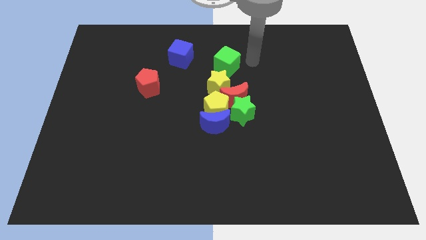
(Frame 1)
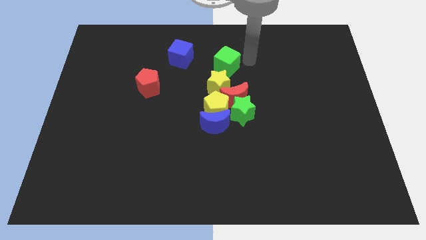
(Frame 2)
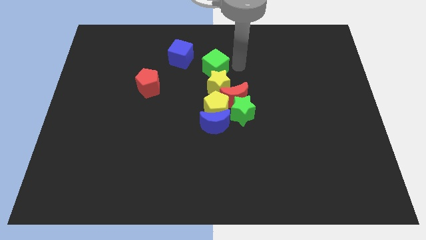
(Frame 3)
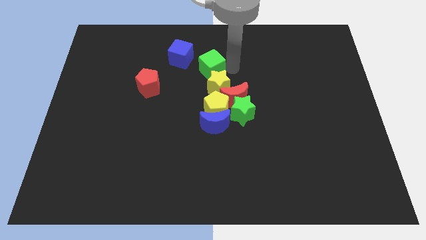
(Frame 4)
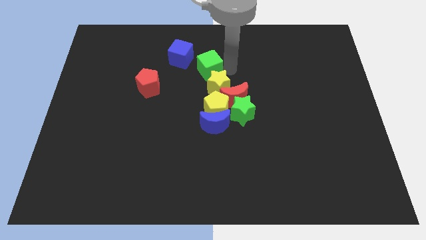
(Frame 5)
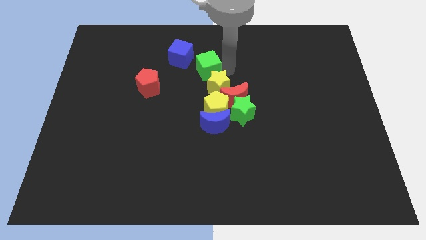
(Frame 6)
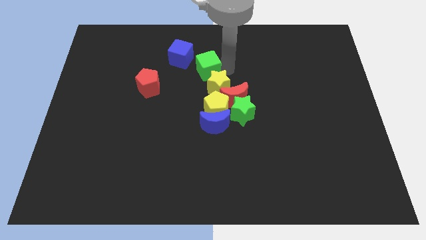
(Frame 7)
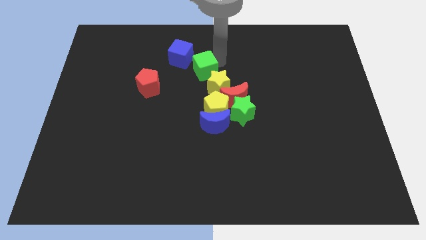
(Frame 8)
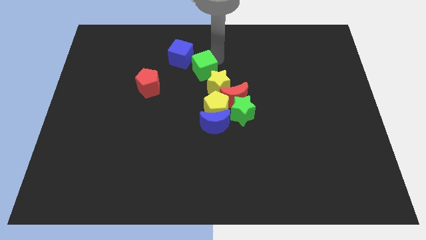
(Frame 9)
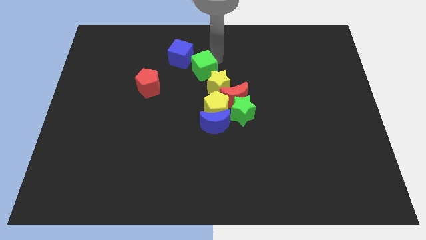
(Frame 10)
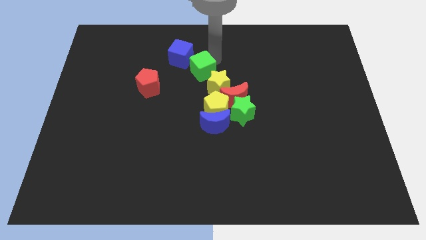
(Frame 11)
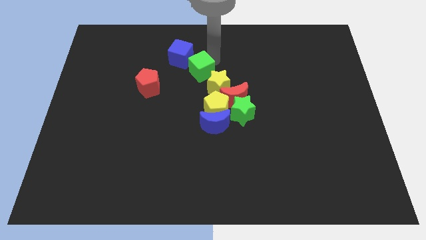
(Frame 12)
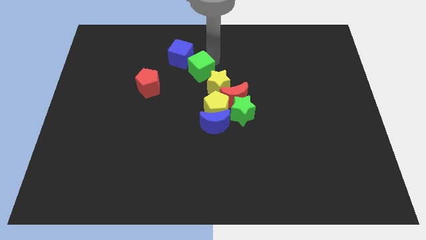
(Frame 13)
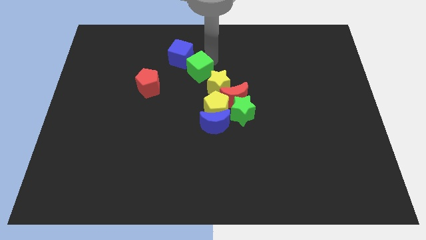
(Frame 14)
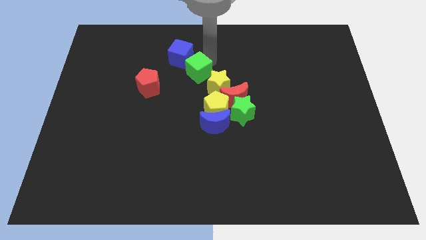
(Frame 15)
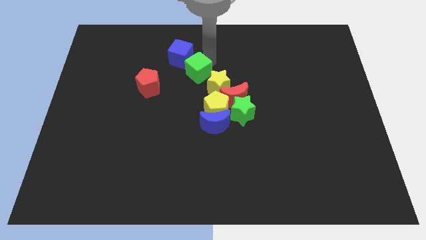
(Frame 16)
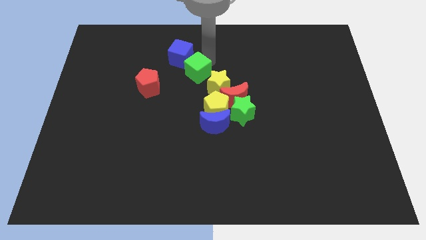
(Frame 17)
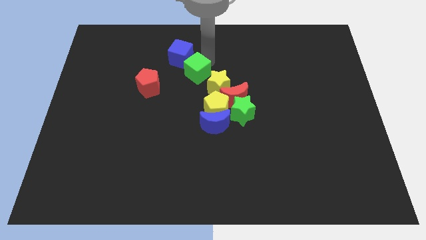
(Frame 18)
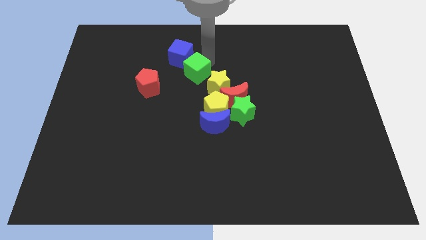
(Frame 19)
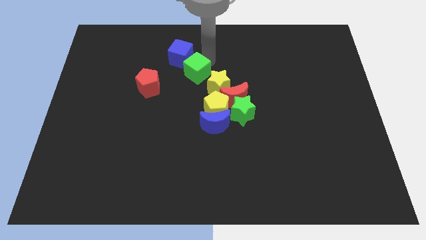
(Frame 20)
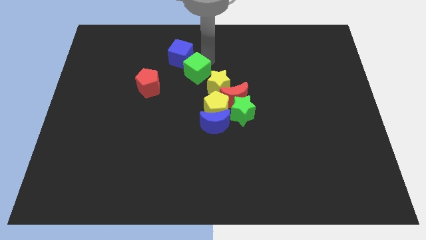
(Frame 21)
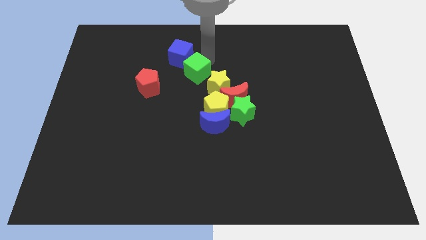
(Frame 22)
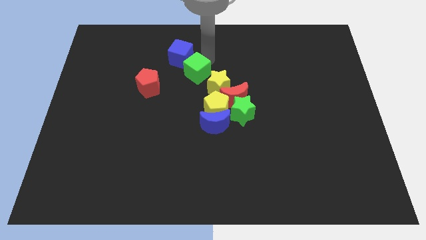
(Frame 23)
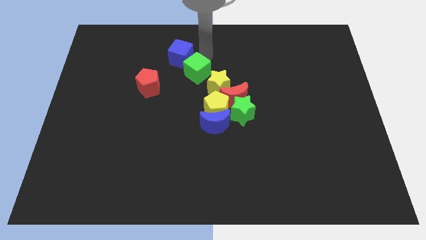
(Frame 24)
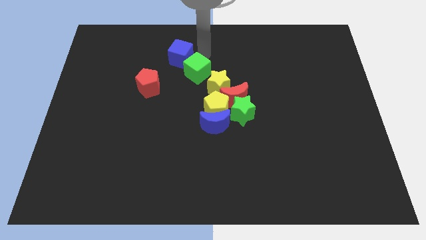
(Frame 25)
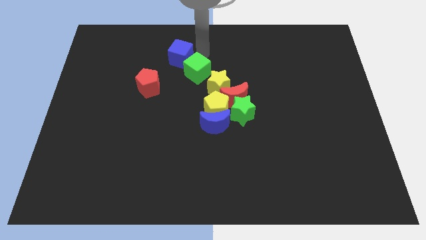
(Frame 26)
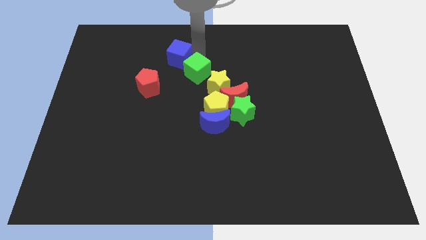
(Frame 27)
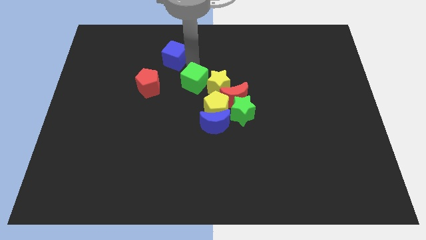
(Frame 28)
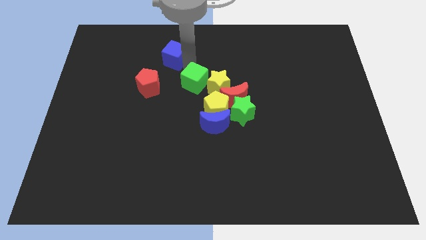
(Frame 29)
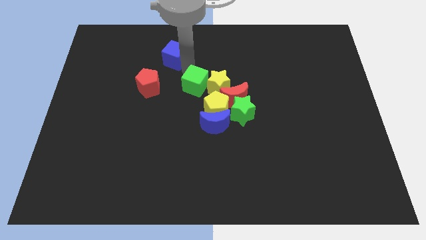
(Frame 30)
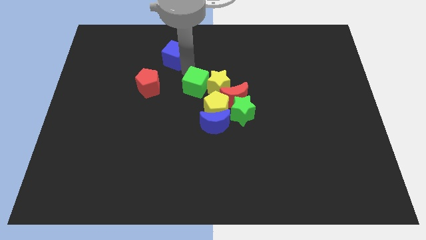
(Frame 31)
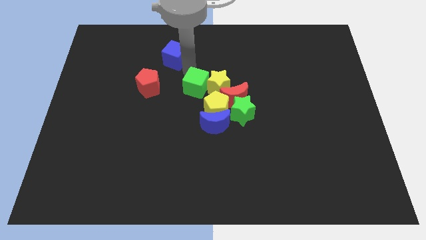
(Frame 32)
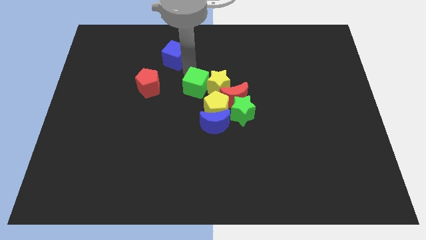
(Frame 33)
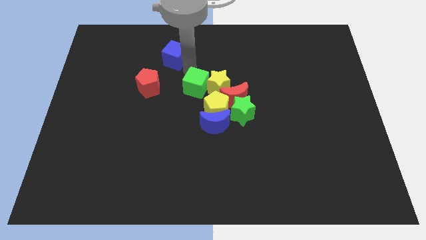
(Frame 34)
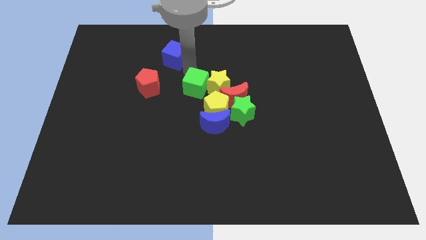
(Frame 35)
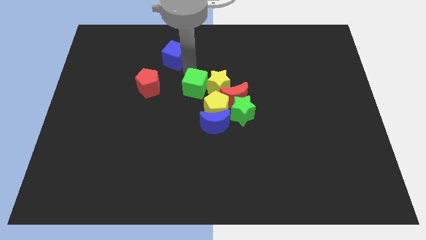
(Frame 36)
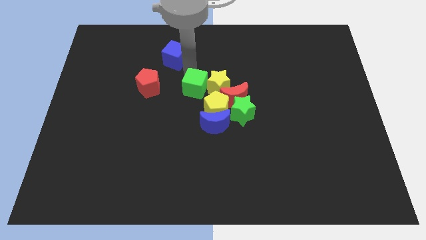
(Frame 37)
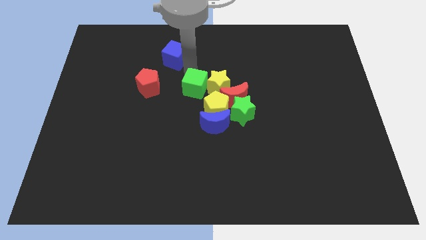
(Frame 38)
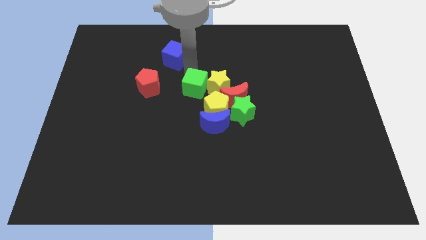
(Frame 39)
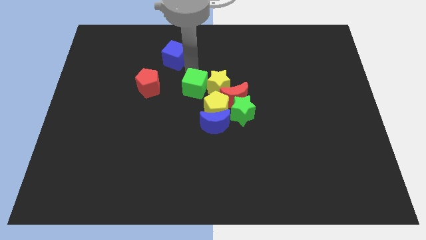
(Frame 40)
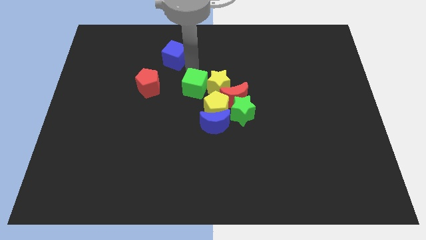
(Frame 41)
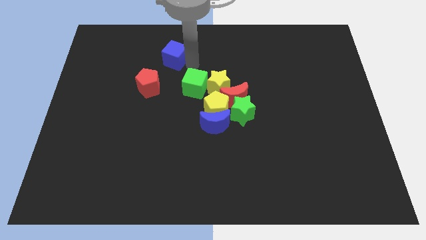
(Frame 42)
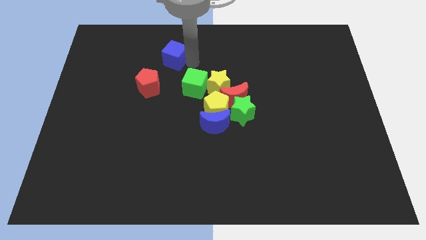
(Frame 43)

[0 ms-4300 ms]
move green cube to the left of yellow star

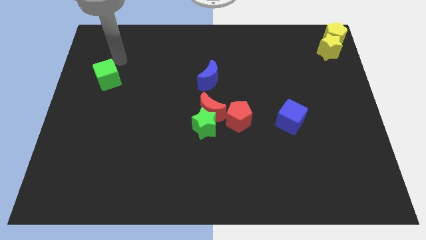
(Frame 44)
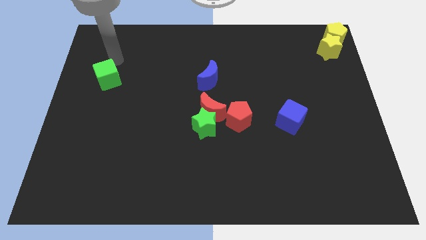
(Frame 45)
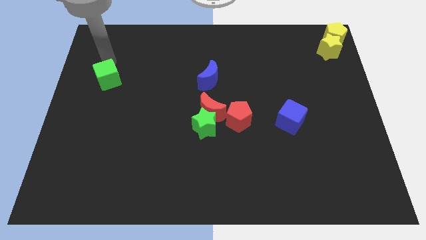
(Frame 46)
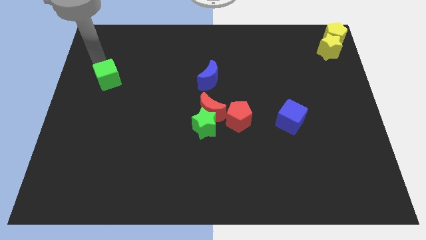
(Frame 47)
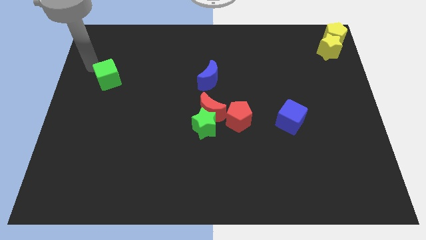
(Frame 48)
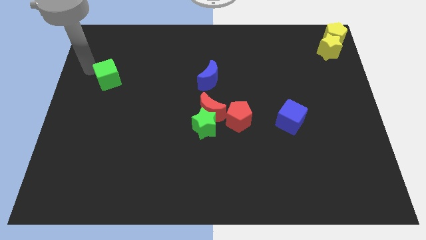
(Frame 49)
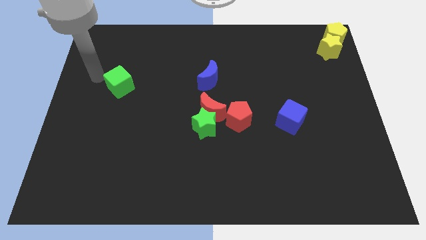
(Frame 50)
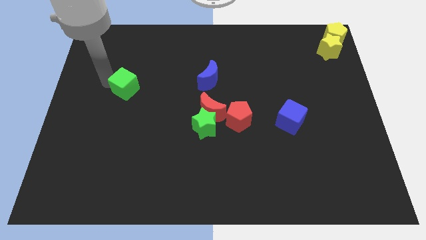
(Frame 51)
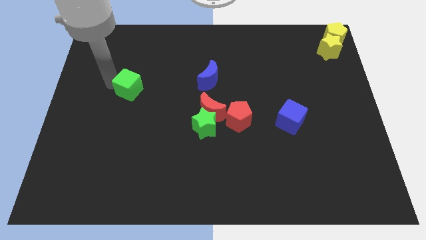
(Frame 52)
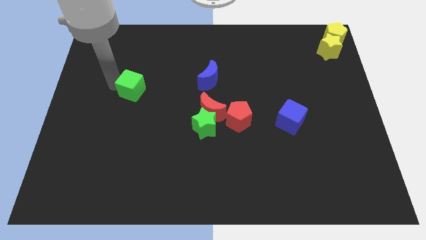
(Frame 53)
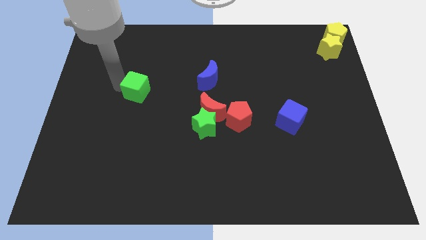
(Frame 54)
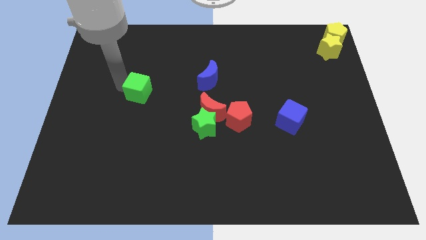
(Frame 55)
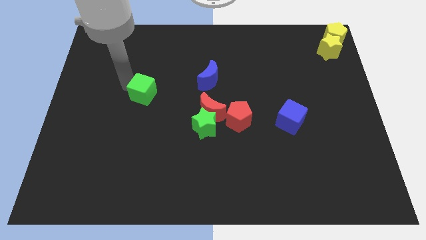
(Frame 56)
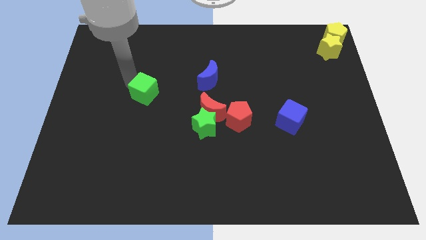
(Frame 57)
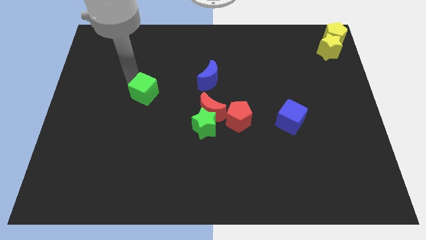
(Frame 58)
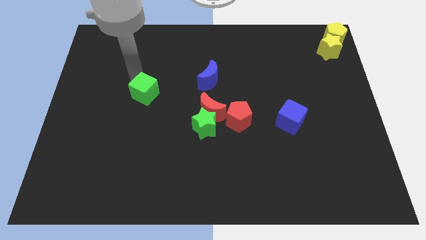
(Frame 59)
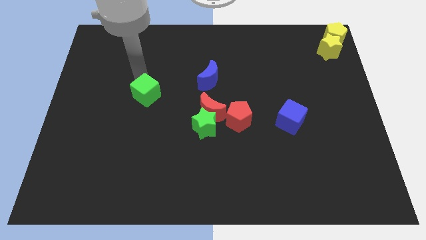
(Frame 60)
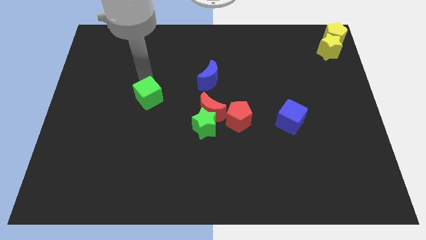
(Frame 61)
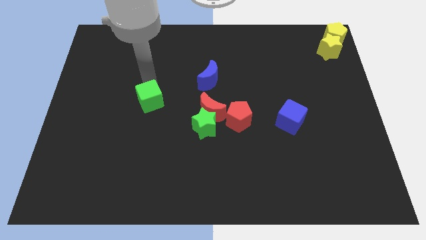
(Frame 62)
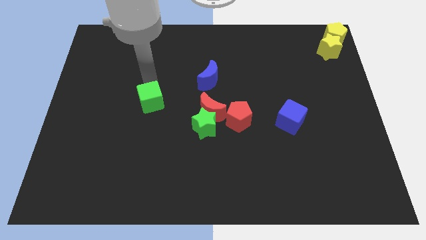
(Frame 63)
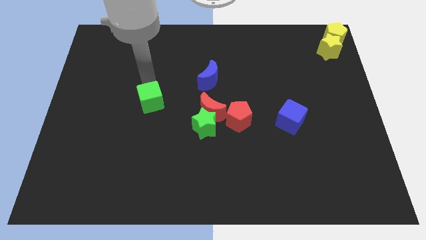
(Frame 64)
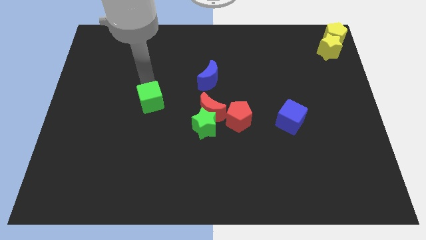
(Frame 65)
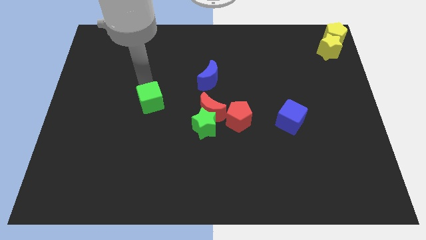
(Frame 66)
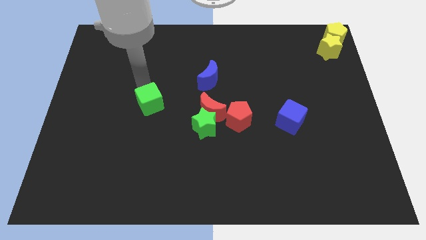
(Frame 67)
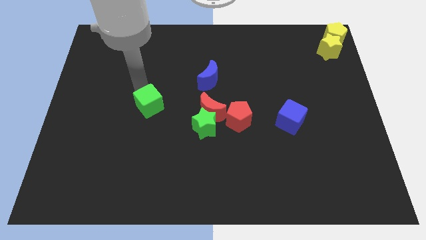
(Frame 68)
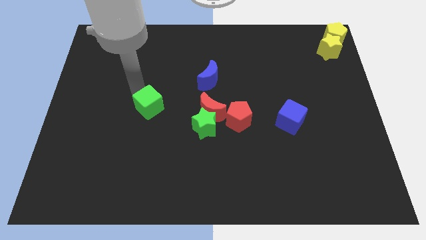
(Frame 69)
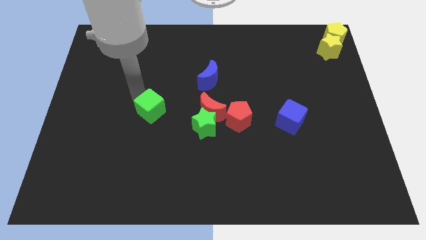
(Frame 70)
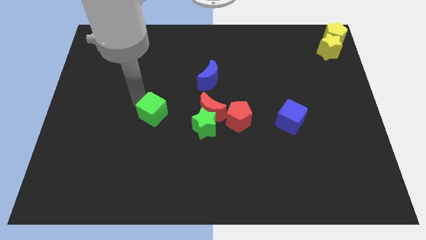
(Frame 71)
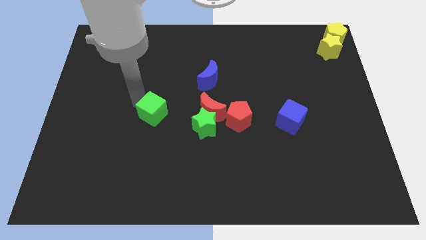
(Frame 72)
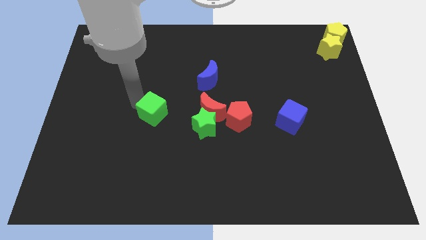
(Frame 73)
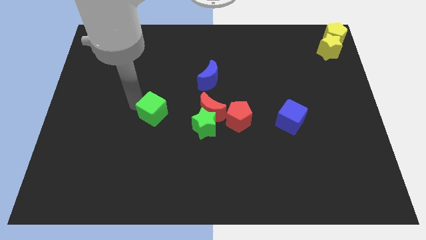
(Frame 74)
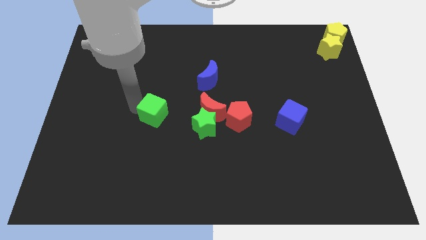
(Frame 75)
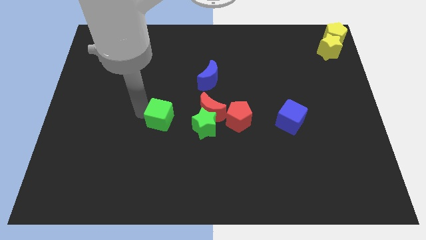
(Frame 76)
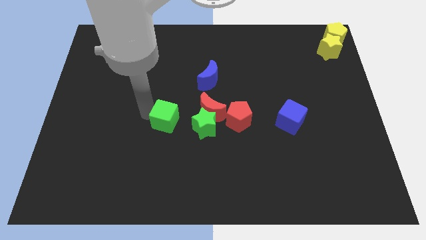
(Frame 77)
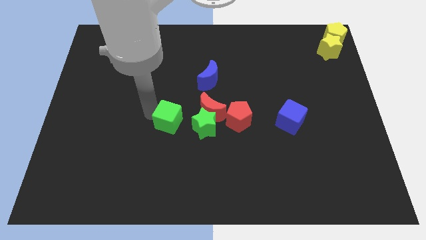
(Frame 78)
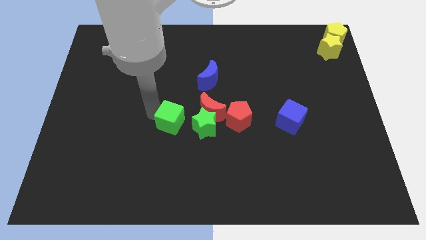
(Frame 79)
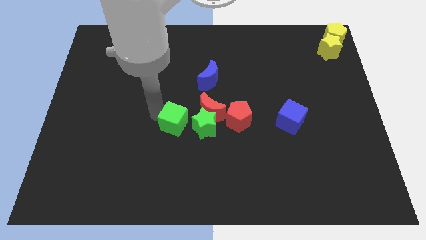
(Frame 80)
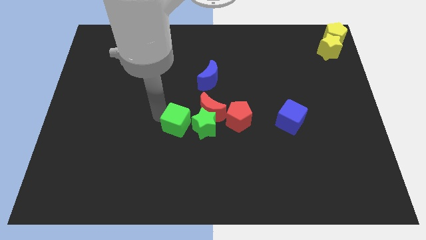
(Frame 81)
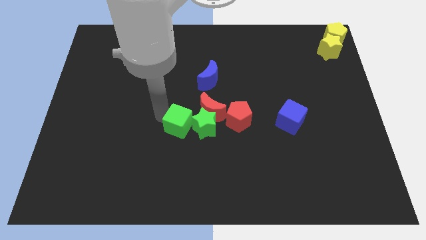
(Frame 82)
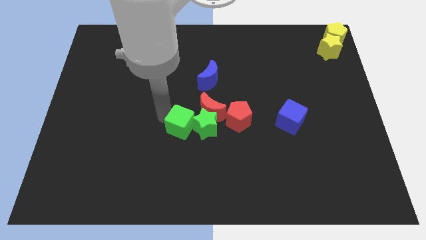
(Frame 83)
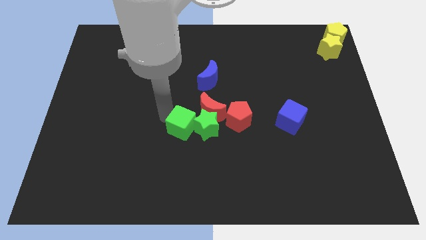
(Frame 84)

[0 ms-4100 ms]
move green cube into left of green star

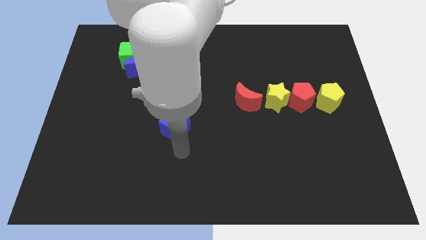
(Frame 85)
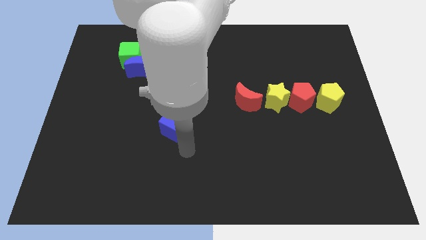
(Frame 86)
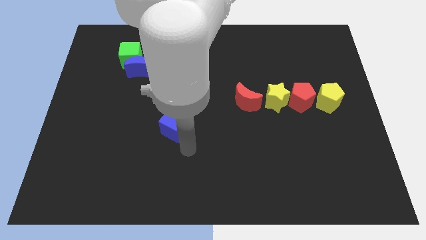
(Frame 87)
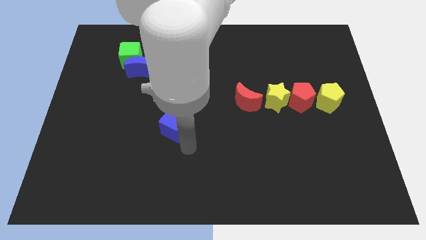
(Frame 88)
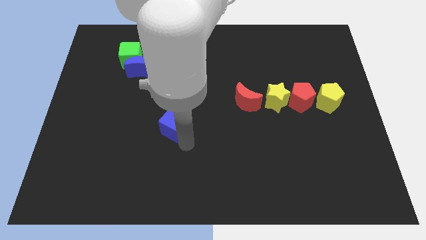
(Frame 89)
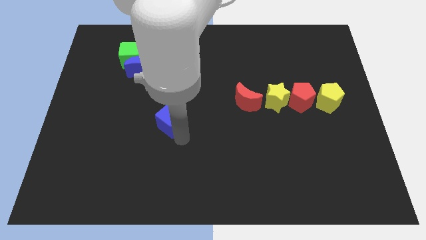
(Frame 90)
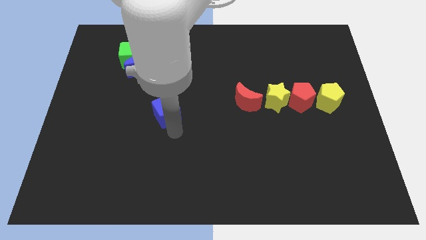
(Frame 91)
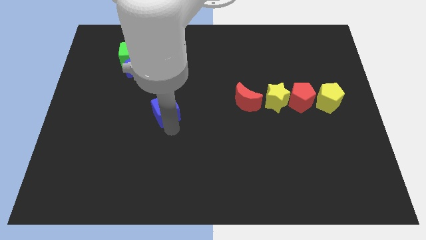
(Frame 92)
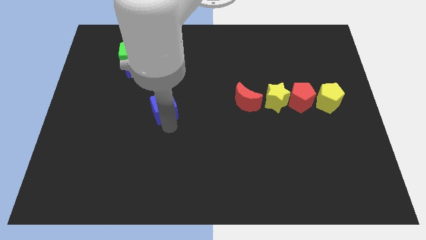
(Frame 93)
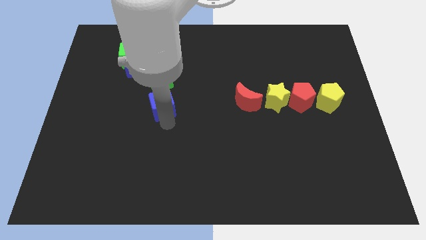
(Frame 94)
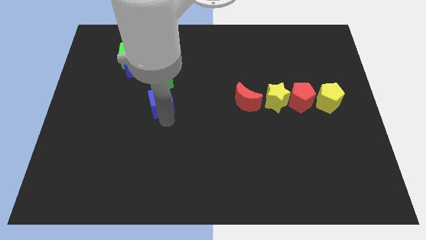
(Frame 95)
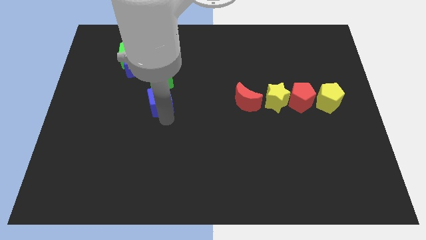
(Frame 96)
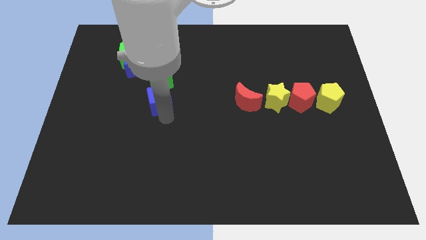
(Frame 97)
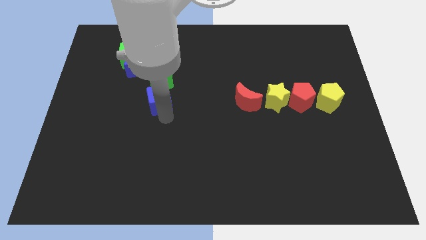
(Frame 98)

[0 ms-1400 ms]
place the blue cube left to the red moon
